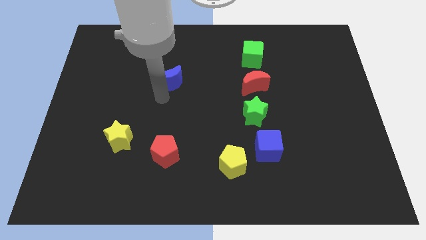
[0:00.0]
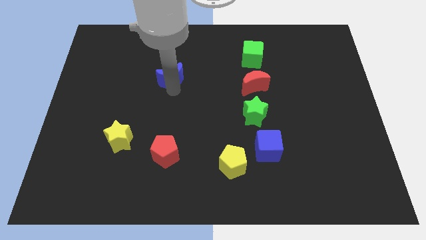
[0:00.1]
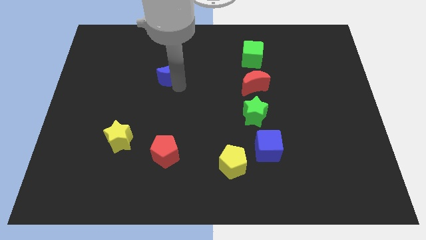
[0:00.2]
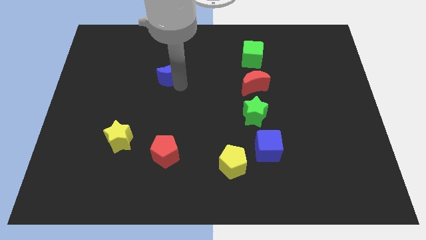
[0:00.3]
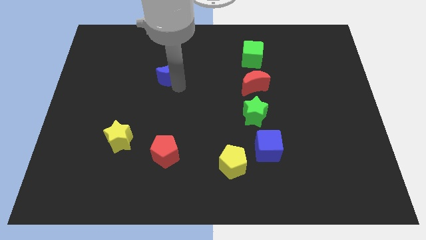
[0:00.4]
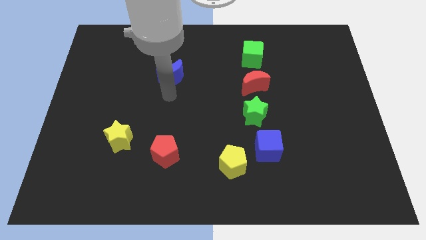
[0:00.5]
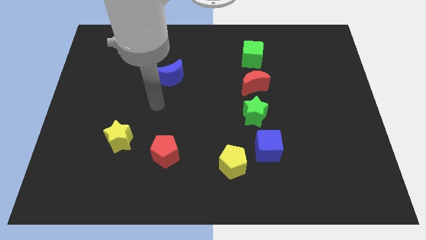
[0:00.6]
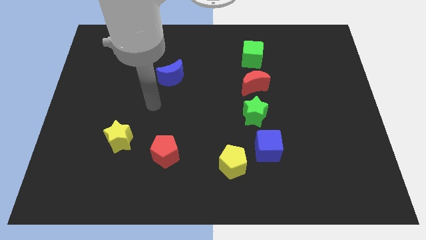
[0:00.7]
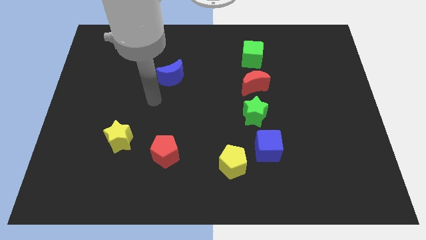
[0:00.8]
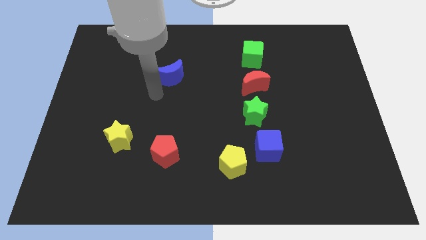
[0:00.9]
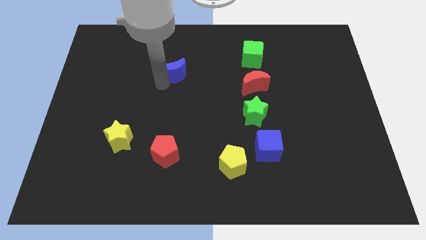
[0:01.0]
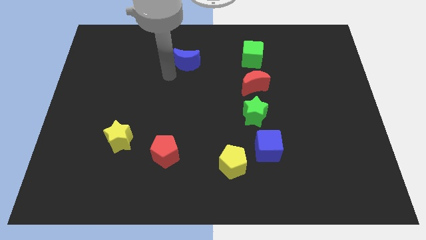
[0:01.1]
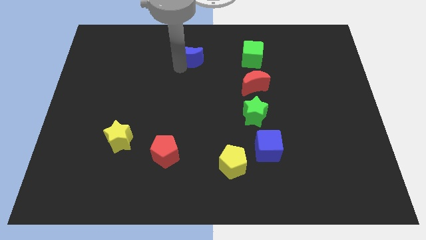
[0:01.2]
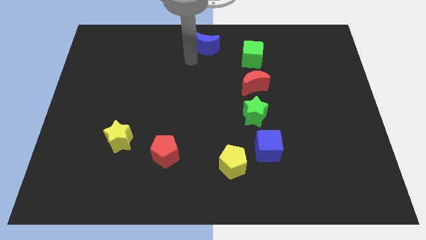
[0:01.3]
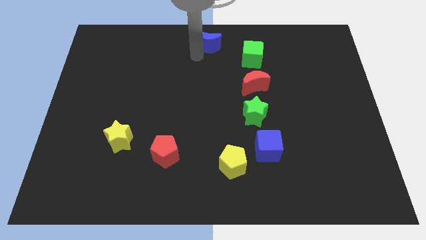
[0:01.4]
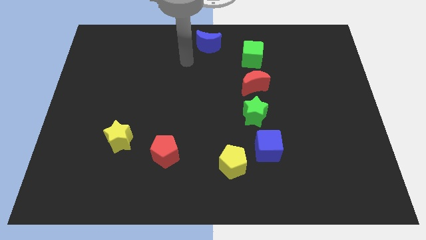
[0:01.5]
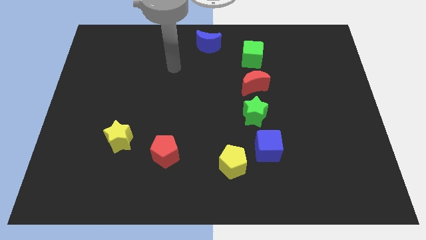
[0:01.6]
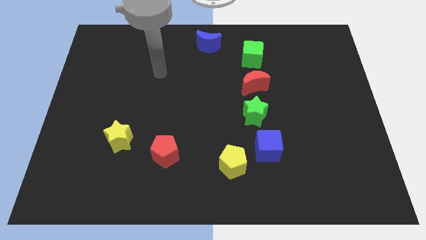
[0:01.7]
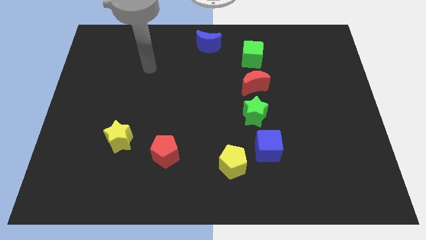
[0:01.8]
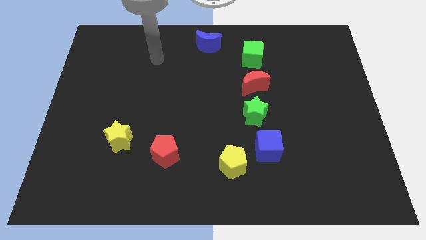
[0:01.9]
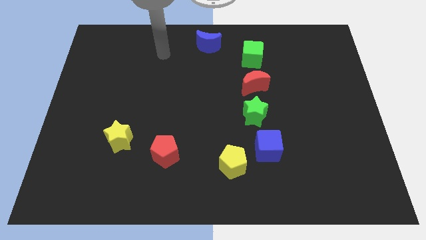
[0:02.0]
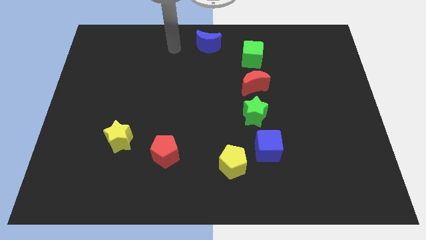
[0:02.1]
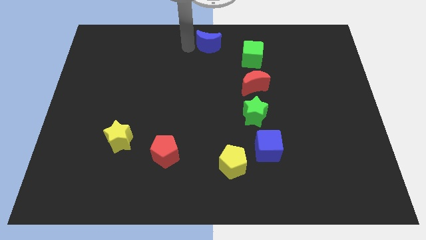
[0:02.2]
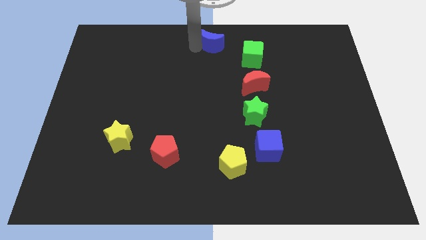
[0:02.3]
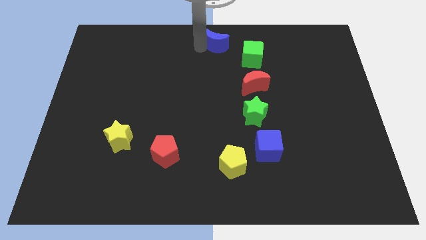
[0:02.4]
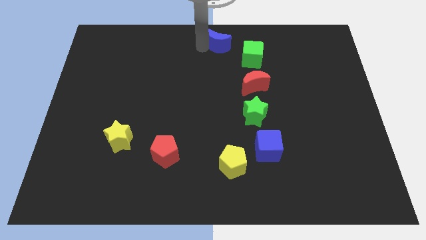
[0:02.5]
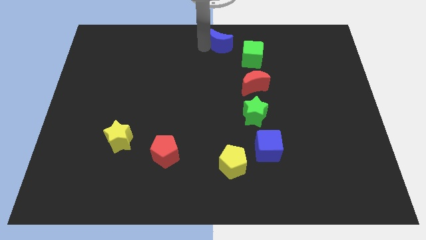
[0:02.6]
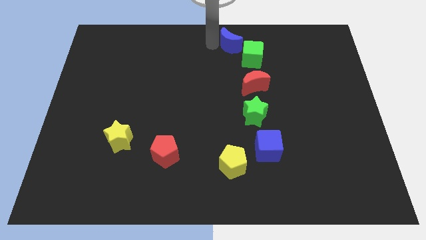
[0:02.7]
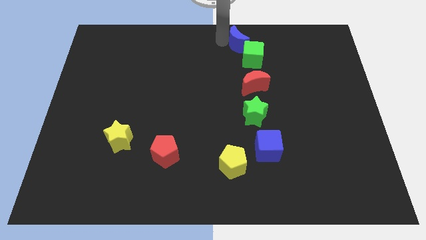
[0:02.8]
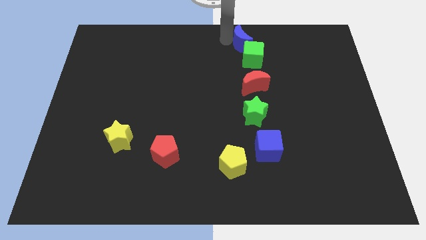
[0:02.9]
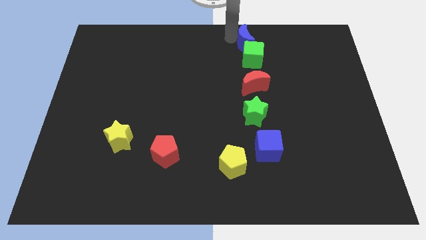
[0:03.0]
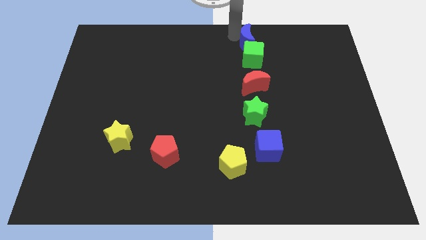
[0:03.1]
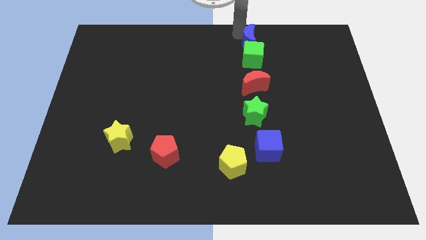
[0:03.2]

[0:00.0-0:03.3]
move the blue crescent to the top of the green cube

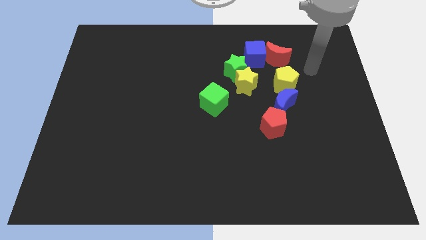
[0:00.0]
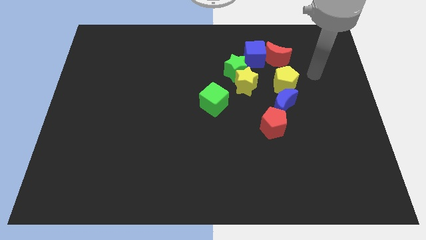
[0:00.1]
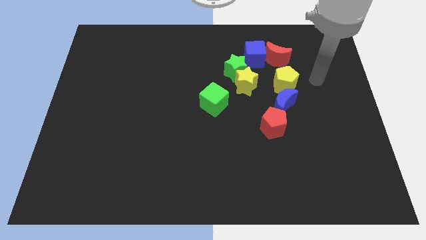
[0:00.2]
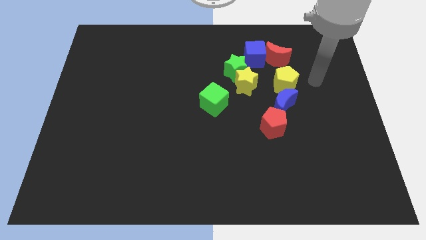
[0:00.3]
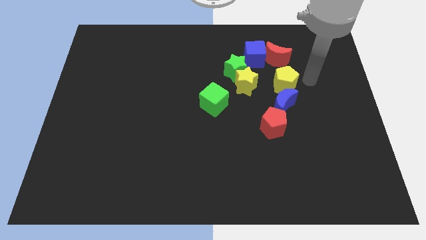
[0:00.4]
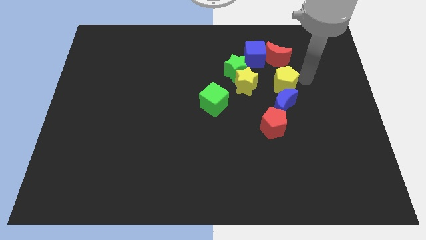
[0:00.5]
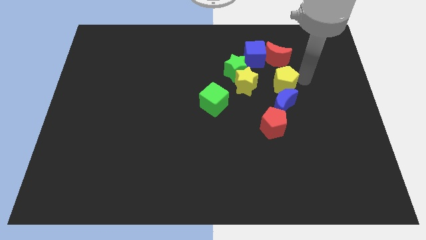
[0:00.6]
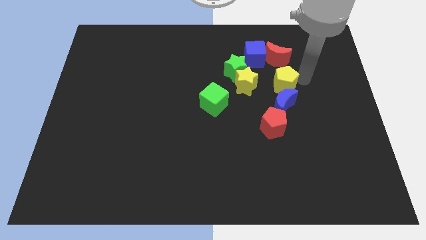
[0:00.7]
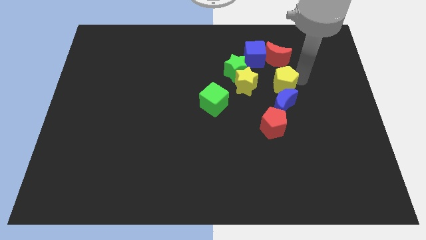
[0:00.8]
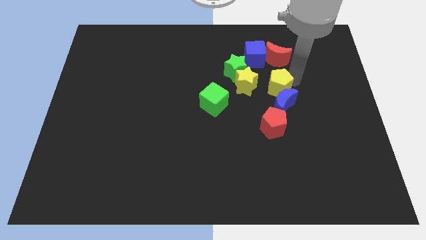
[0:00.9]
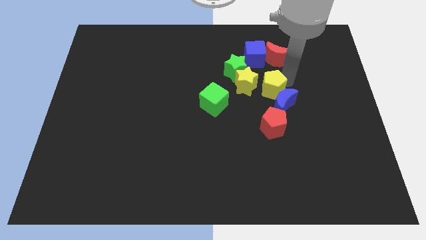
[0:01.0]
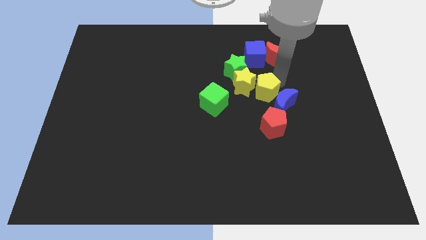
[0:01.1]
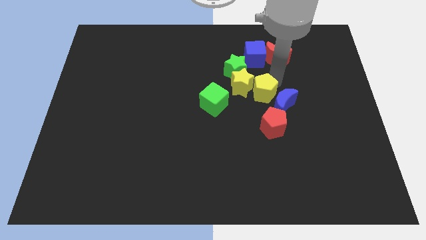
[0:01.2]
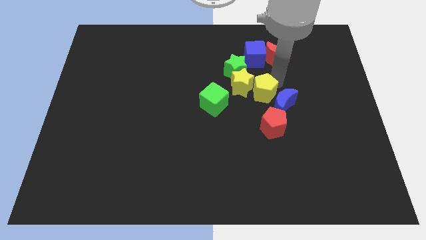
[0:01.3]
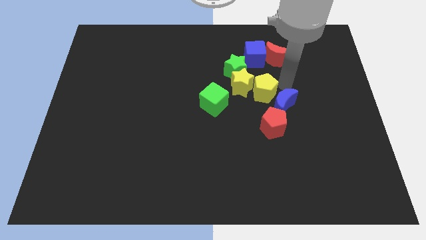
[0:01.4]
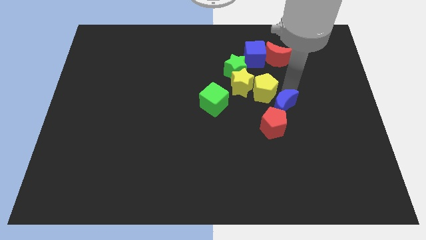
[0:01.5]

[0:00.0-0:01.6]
push the yellow pentagon into the yellow star

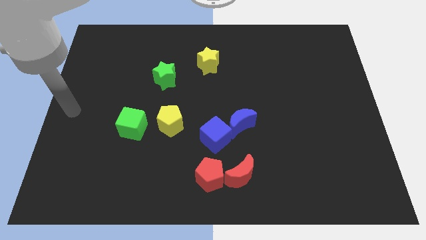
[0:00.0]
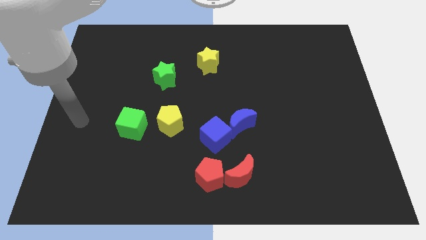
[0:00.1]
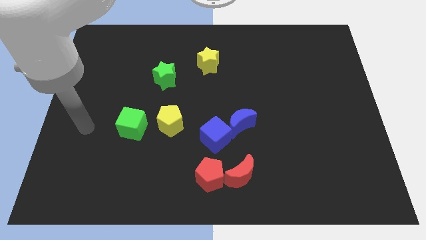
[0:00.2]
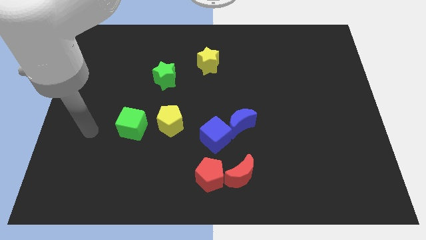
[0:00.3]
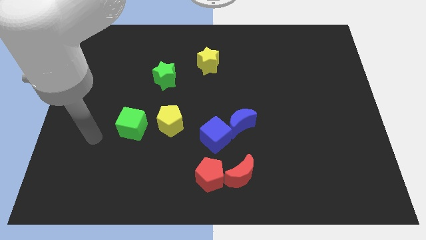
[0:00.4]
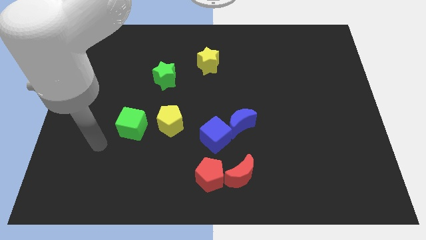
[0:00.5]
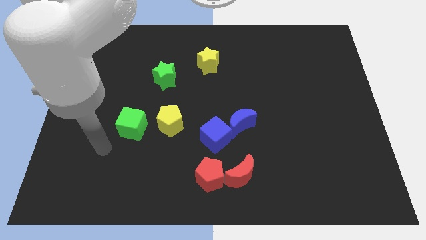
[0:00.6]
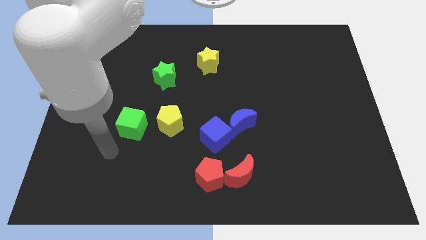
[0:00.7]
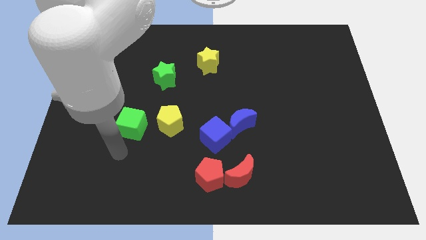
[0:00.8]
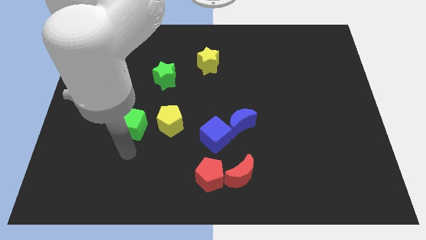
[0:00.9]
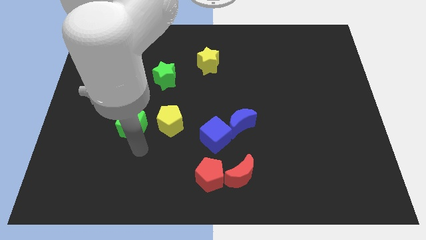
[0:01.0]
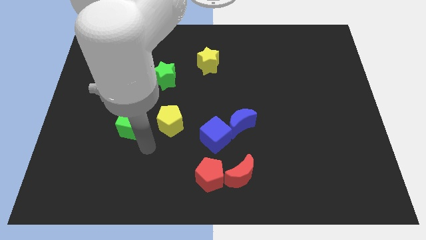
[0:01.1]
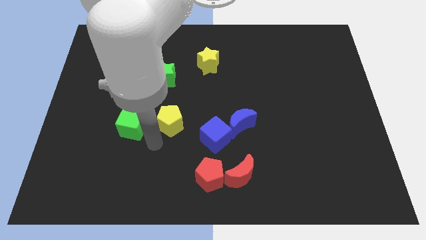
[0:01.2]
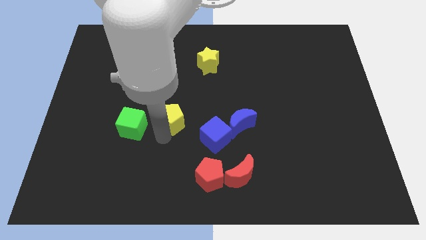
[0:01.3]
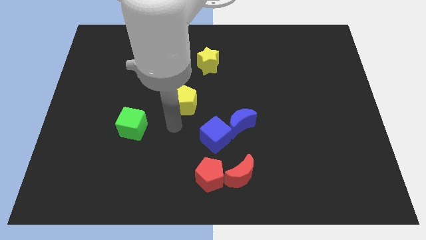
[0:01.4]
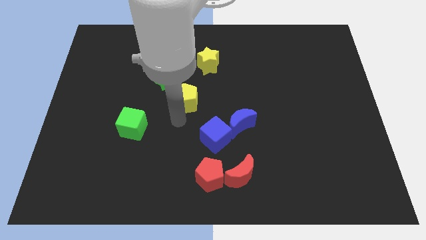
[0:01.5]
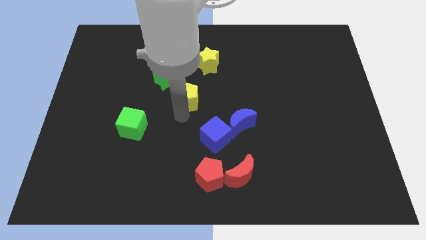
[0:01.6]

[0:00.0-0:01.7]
push the yellow pentagon away from the green cube

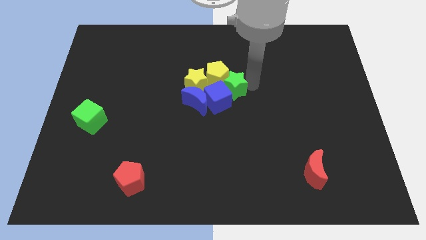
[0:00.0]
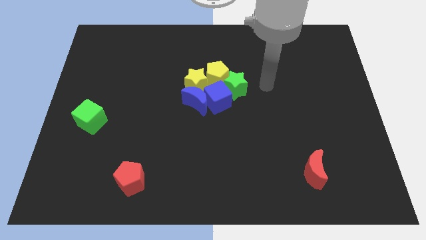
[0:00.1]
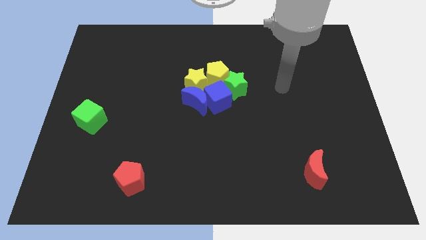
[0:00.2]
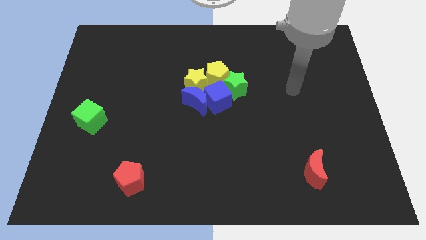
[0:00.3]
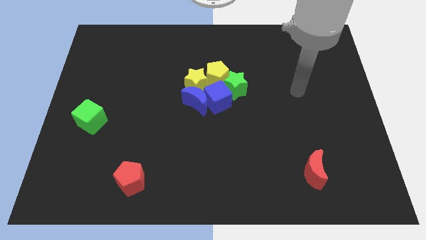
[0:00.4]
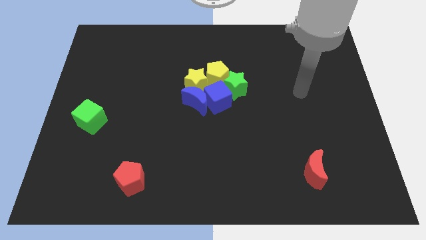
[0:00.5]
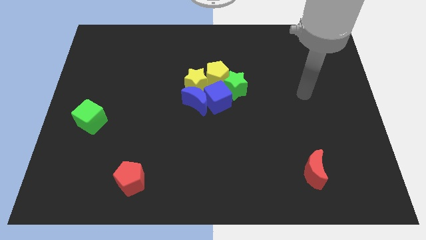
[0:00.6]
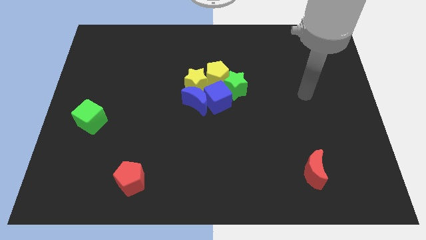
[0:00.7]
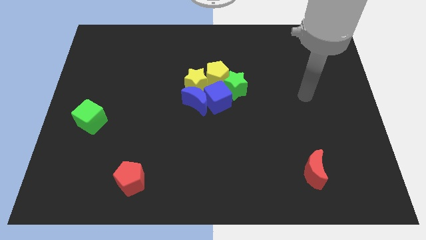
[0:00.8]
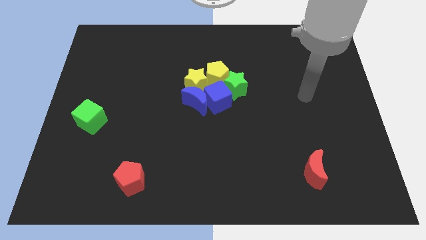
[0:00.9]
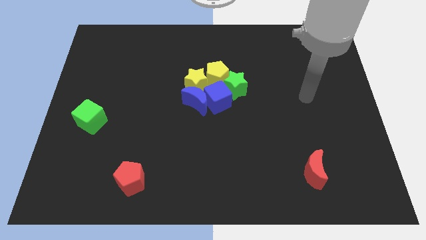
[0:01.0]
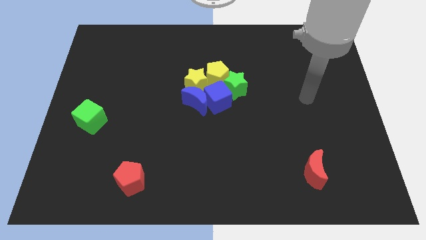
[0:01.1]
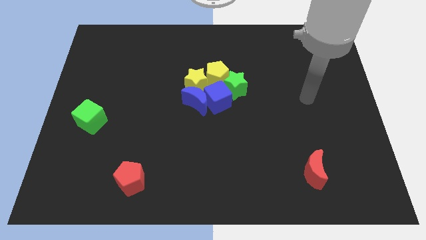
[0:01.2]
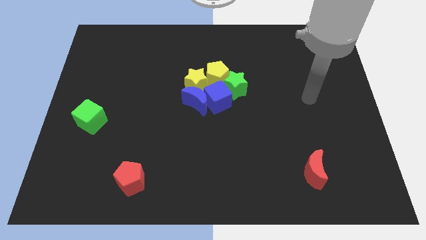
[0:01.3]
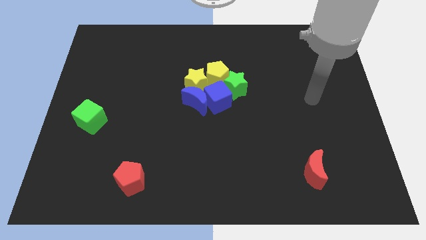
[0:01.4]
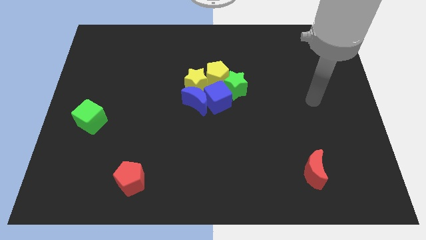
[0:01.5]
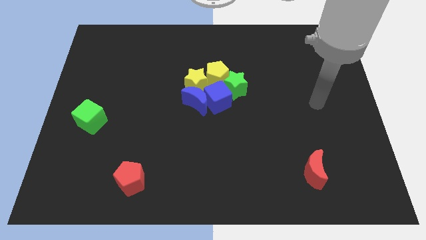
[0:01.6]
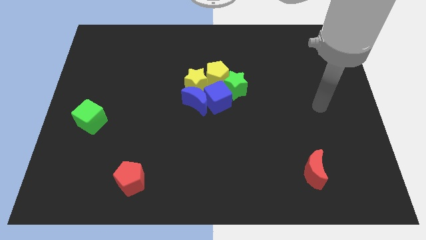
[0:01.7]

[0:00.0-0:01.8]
move the arm away from the green star

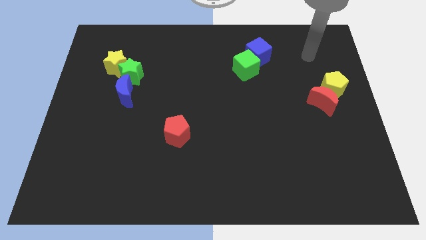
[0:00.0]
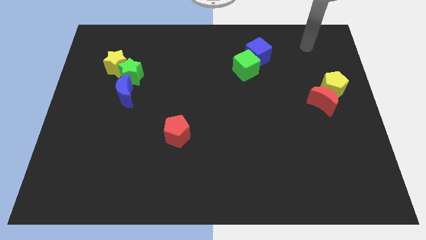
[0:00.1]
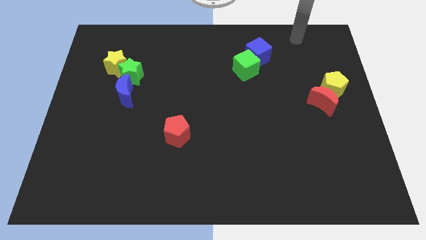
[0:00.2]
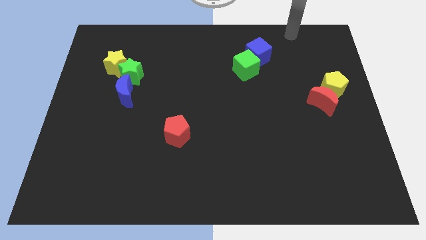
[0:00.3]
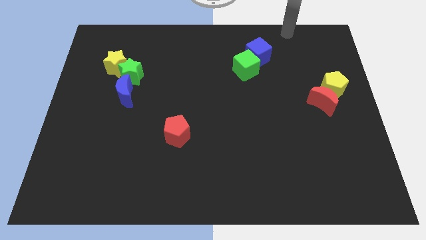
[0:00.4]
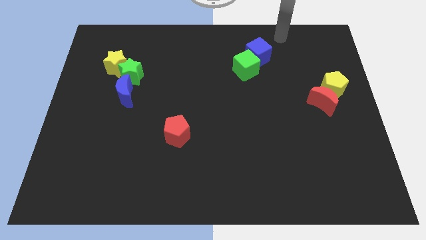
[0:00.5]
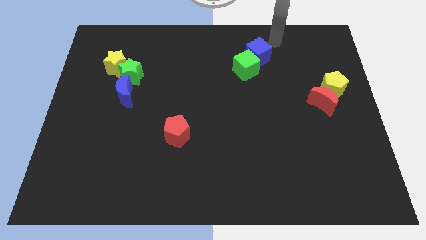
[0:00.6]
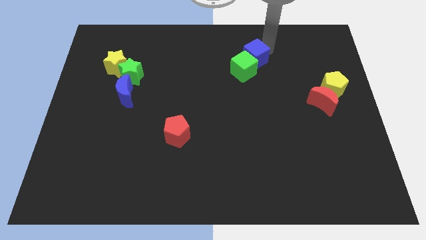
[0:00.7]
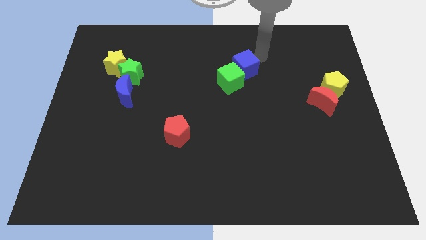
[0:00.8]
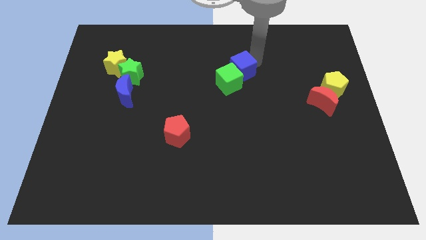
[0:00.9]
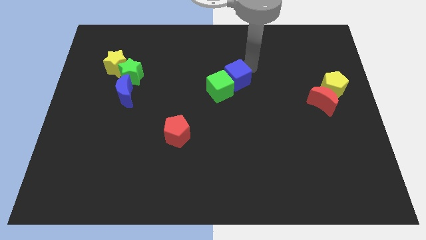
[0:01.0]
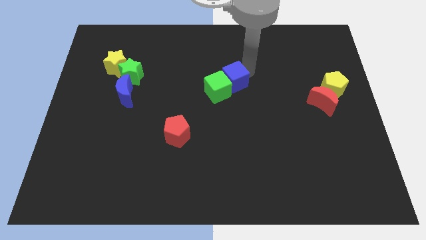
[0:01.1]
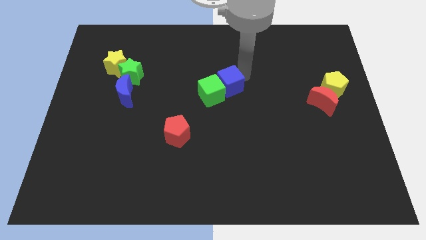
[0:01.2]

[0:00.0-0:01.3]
push the green cube and blue cube towards the center of the board
